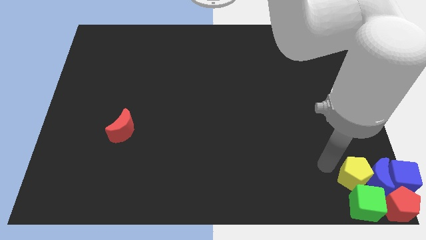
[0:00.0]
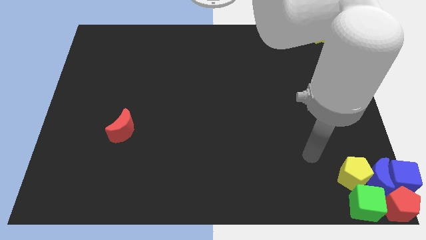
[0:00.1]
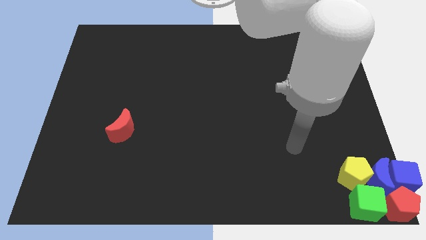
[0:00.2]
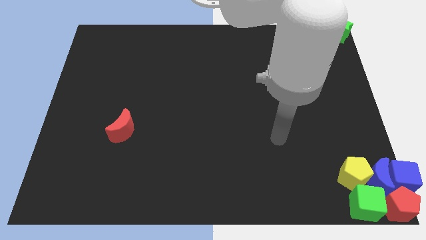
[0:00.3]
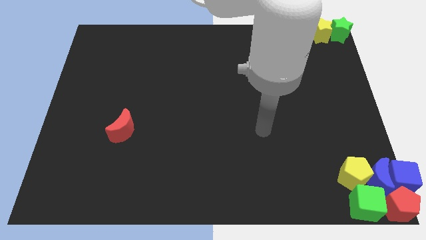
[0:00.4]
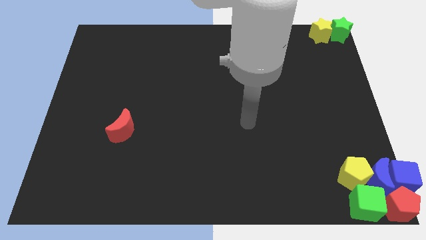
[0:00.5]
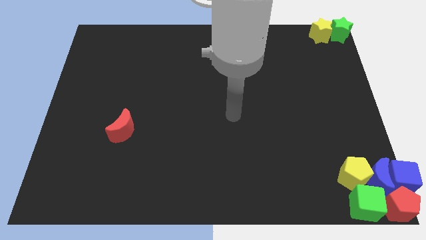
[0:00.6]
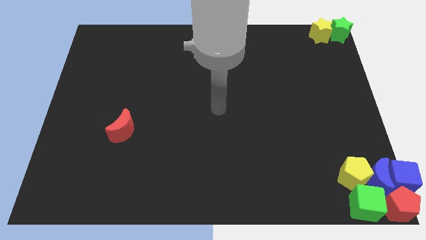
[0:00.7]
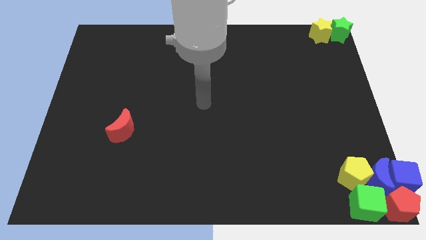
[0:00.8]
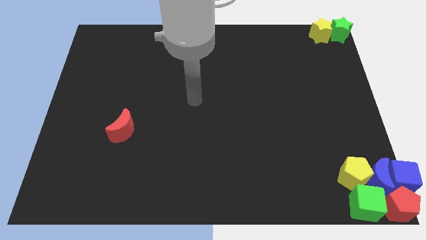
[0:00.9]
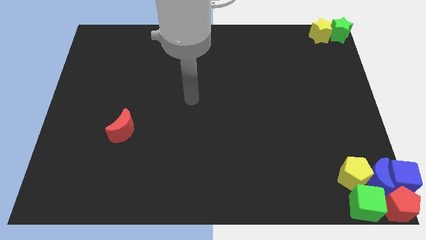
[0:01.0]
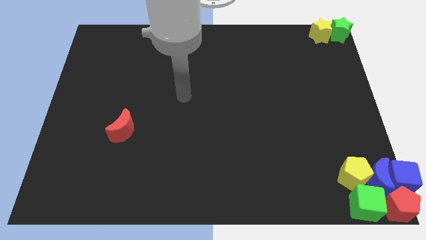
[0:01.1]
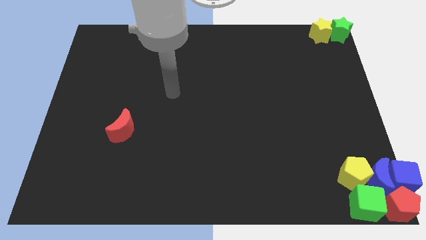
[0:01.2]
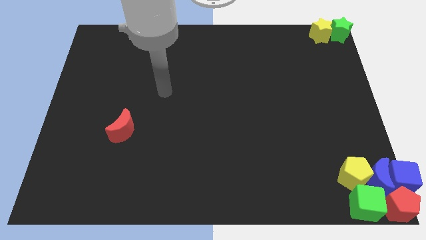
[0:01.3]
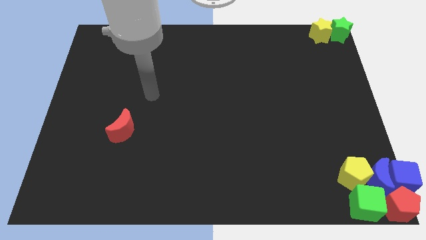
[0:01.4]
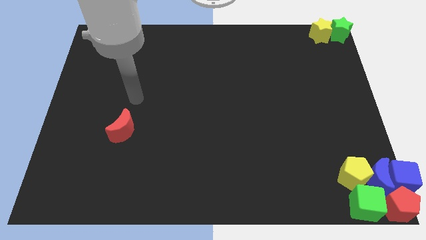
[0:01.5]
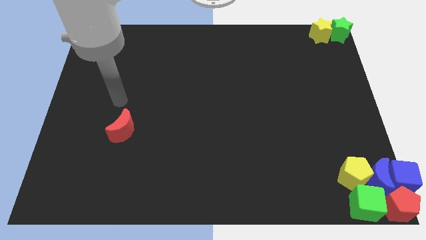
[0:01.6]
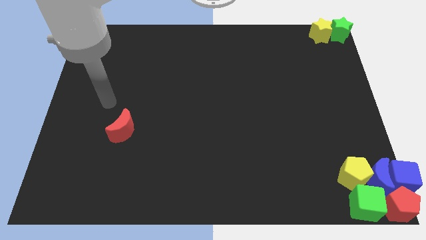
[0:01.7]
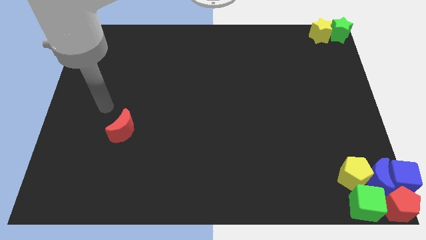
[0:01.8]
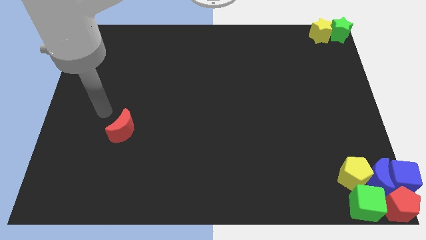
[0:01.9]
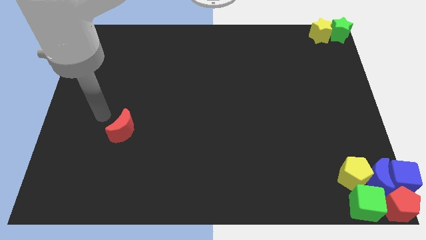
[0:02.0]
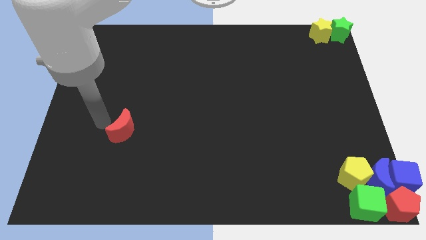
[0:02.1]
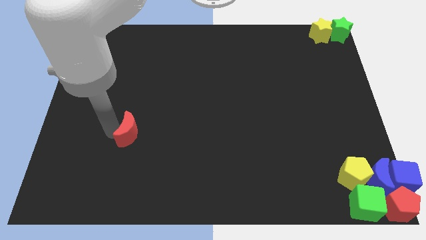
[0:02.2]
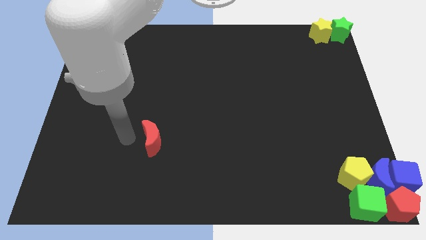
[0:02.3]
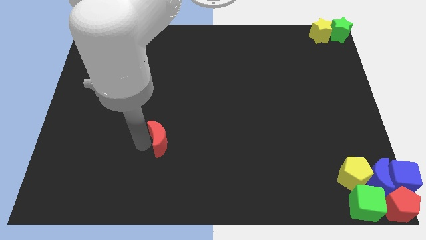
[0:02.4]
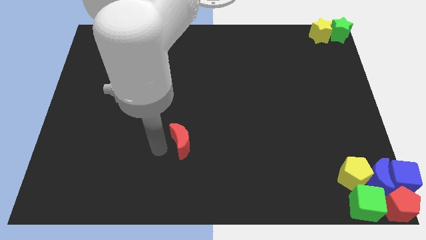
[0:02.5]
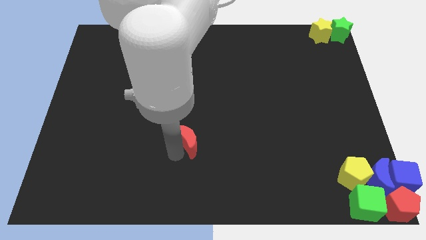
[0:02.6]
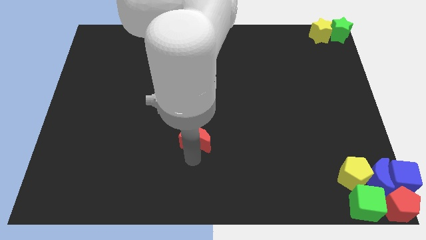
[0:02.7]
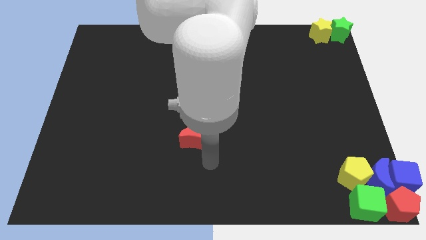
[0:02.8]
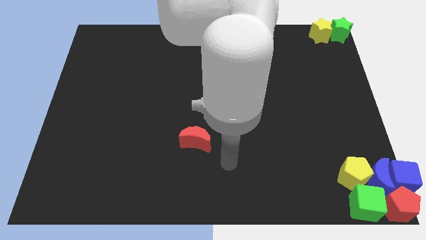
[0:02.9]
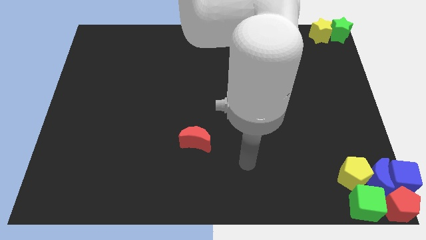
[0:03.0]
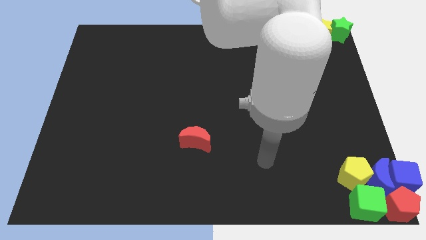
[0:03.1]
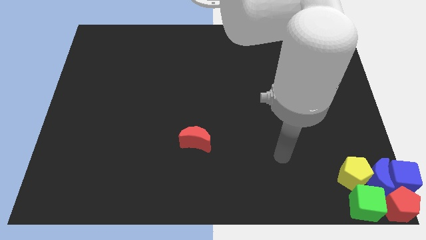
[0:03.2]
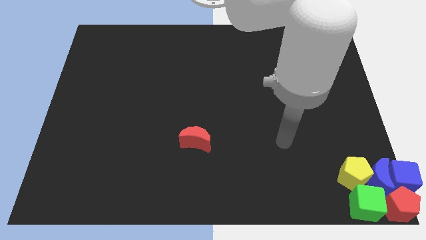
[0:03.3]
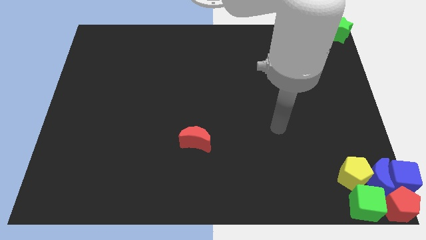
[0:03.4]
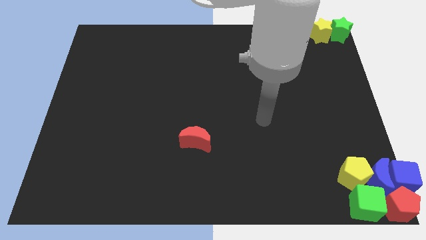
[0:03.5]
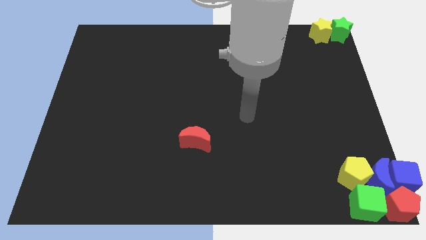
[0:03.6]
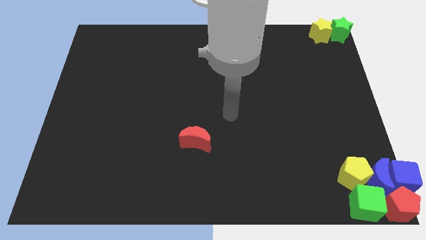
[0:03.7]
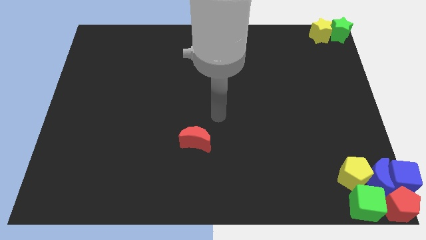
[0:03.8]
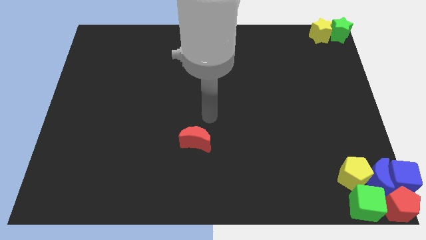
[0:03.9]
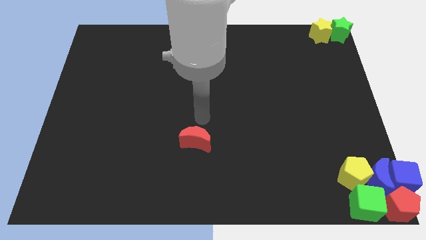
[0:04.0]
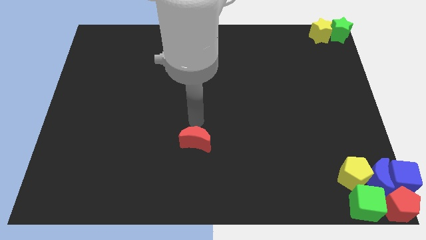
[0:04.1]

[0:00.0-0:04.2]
place the red moon at the center of the board

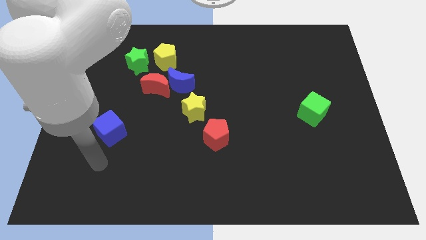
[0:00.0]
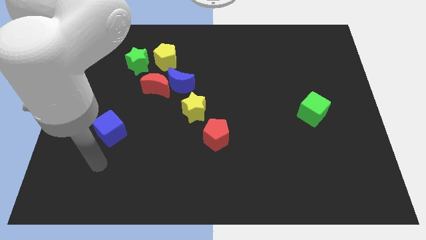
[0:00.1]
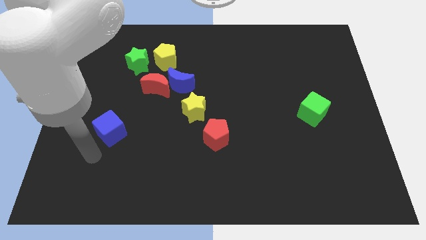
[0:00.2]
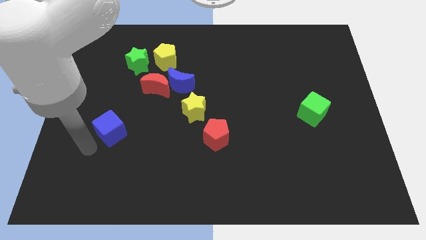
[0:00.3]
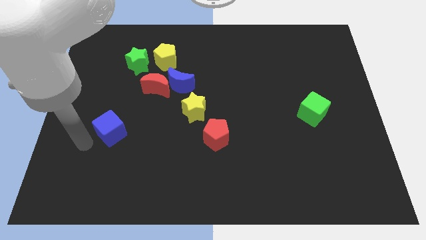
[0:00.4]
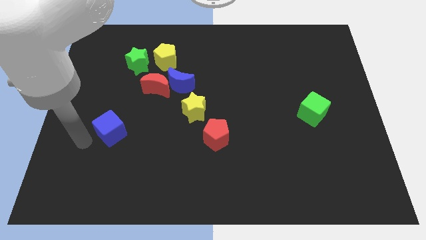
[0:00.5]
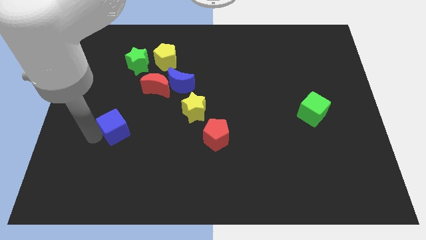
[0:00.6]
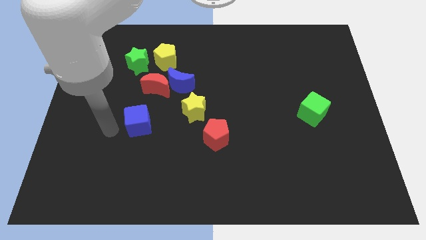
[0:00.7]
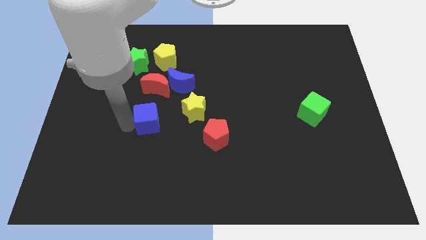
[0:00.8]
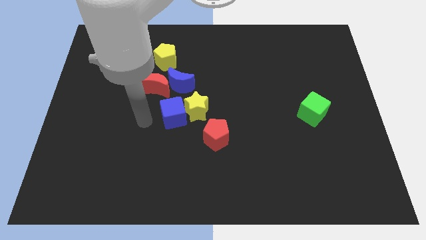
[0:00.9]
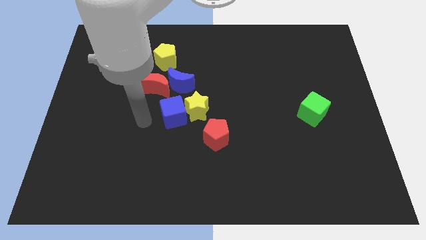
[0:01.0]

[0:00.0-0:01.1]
push the blue cube into the left side of the yellow star

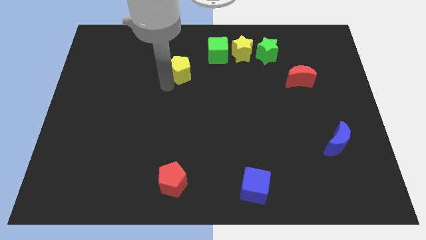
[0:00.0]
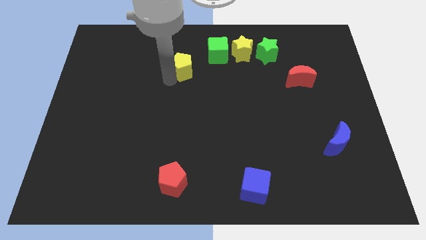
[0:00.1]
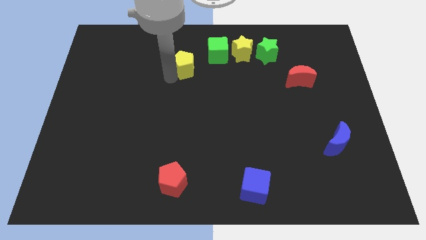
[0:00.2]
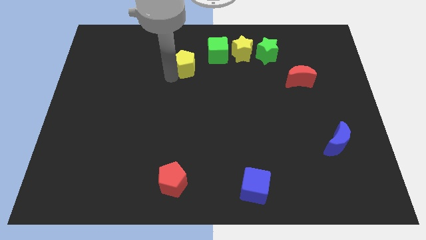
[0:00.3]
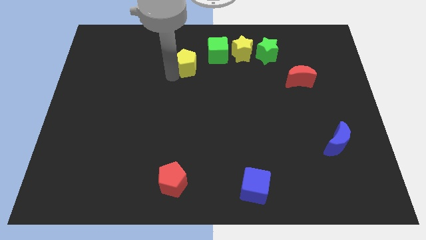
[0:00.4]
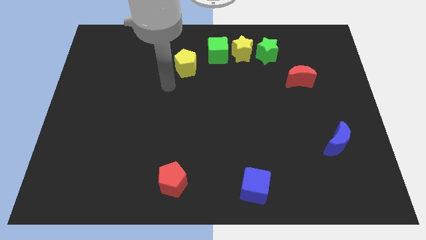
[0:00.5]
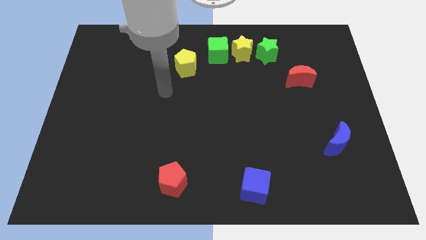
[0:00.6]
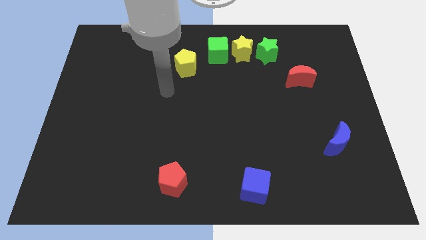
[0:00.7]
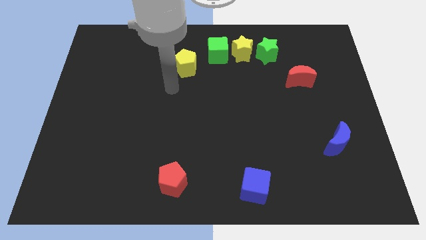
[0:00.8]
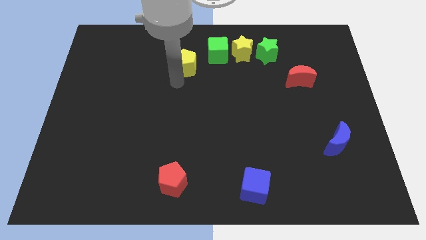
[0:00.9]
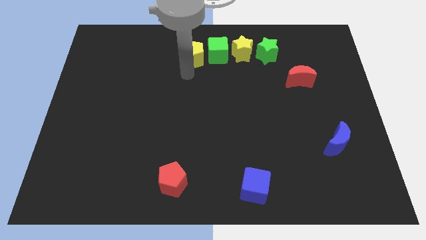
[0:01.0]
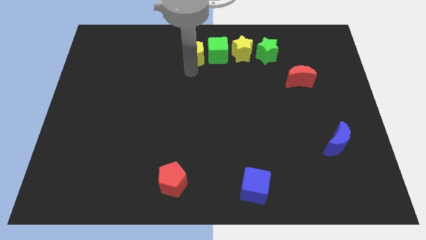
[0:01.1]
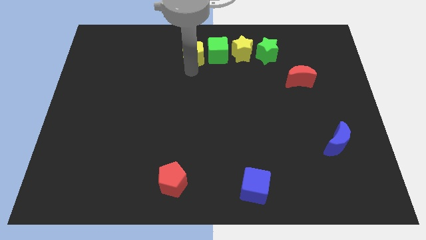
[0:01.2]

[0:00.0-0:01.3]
place the yellow pentagon to the left side of the green cube

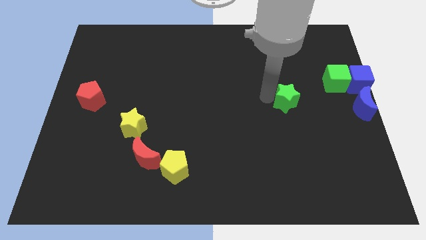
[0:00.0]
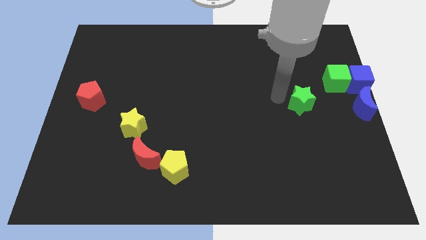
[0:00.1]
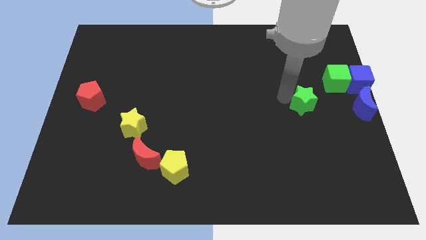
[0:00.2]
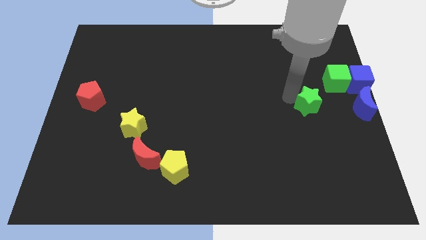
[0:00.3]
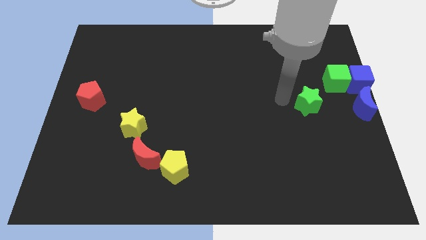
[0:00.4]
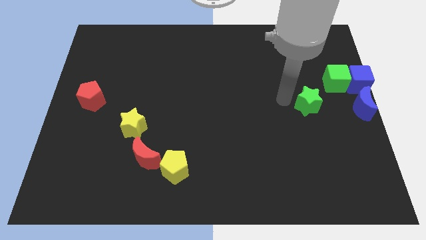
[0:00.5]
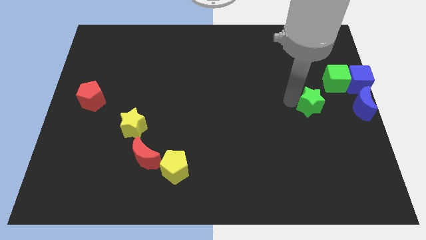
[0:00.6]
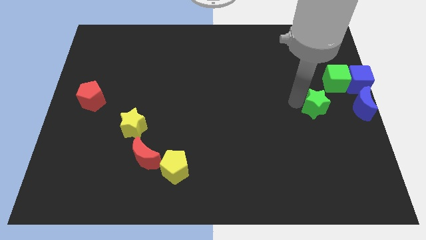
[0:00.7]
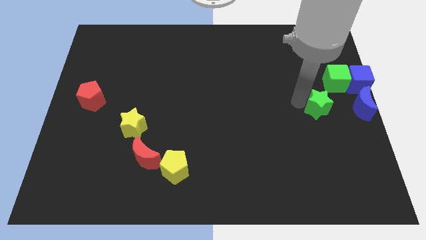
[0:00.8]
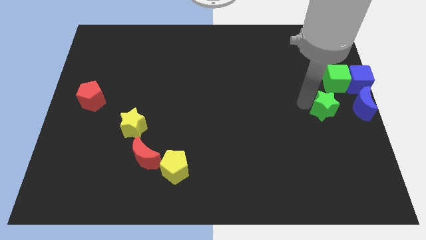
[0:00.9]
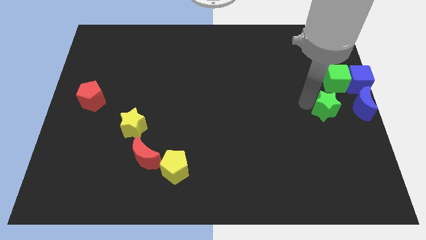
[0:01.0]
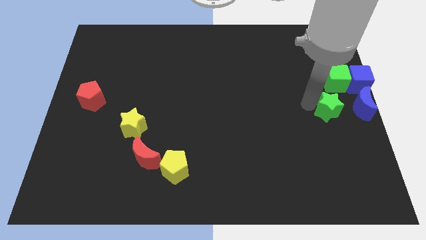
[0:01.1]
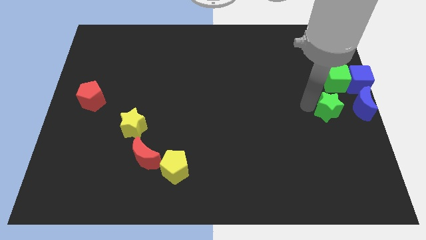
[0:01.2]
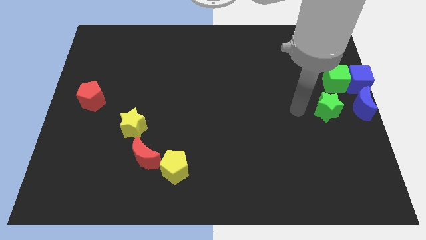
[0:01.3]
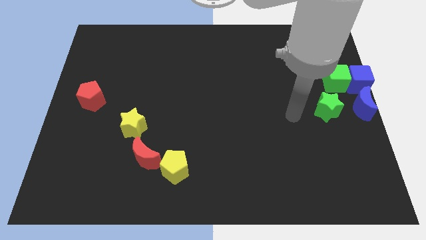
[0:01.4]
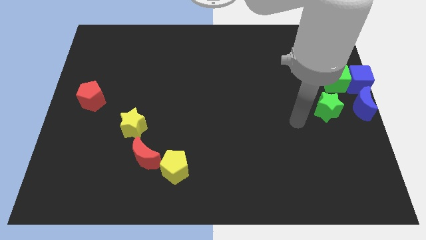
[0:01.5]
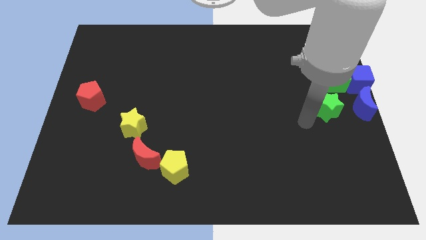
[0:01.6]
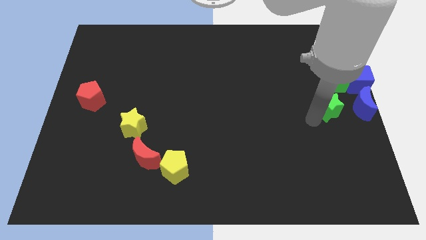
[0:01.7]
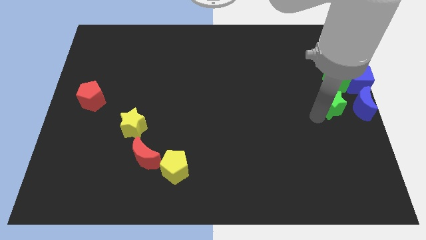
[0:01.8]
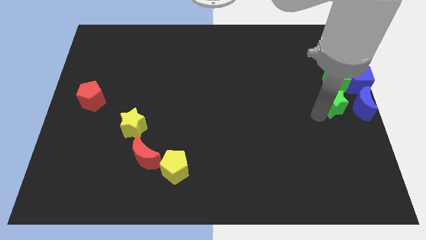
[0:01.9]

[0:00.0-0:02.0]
push the green star to the bottom of the green cube

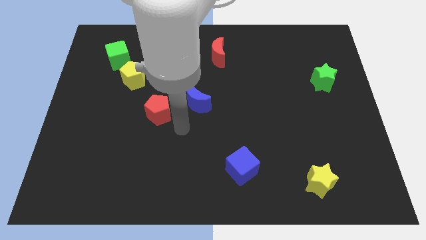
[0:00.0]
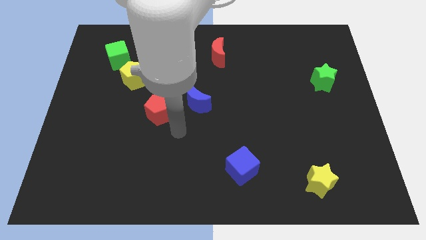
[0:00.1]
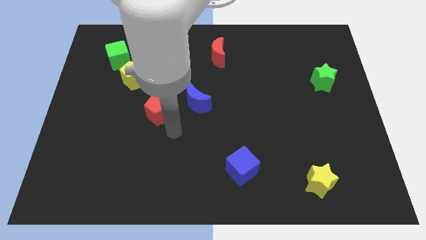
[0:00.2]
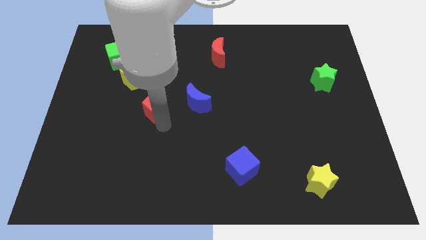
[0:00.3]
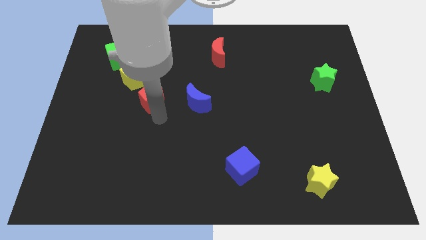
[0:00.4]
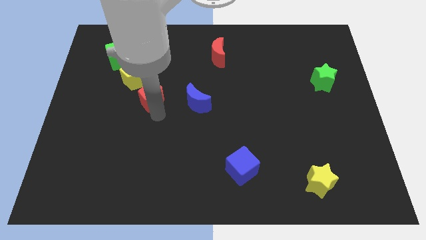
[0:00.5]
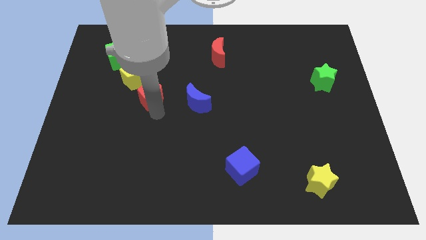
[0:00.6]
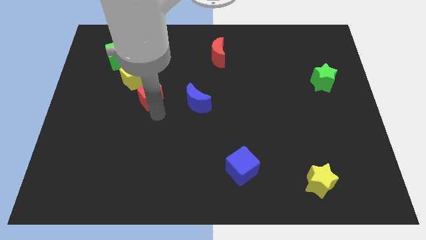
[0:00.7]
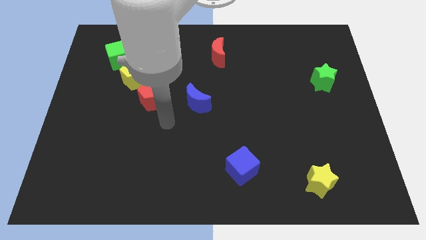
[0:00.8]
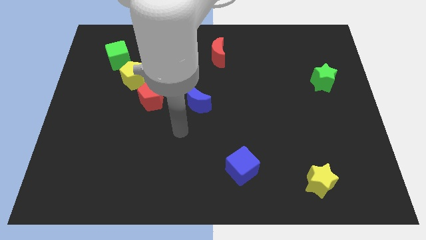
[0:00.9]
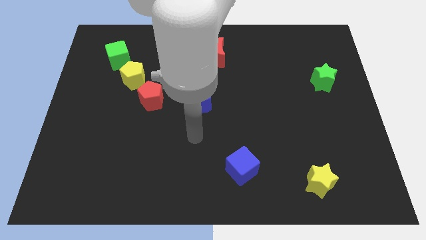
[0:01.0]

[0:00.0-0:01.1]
place red pentagon below yellow pentagon
